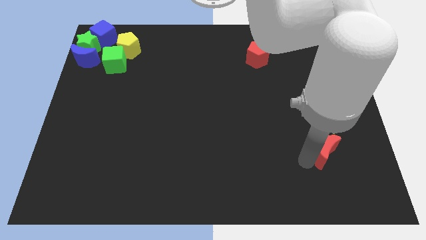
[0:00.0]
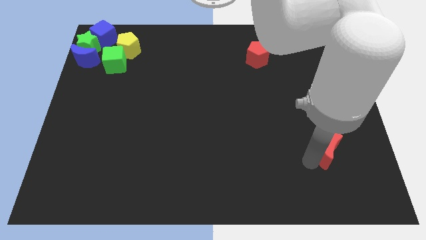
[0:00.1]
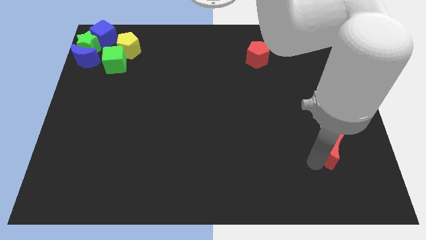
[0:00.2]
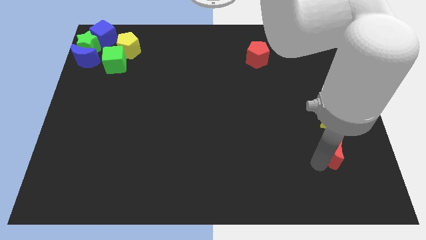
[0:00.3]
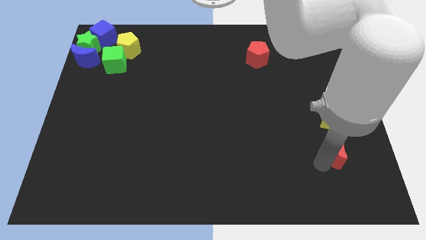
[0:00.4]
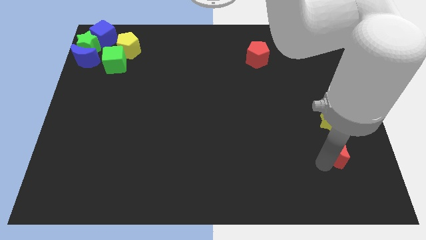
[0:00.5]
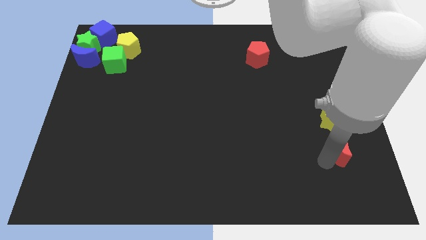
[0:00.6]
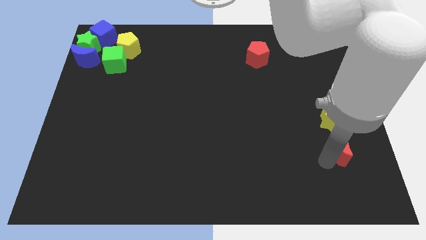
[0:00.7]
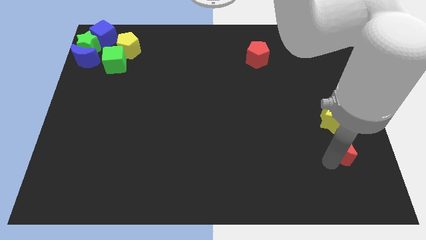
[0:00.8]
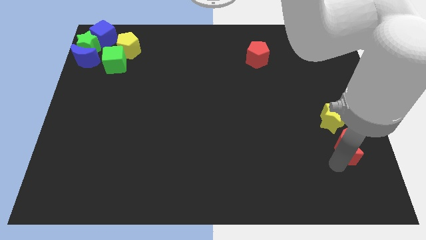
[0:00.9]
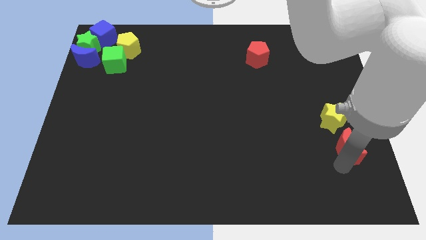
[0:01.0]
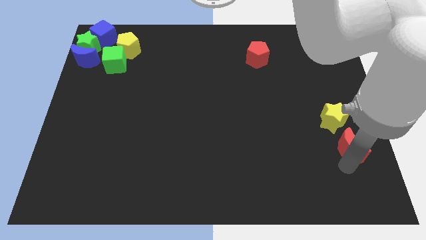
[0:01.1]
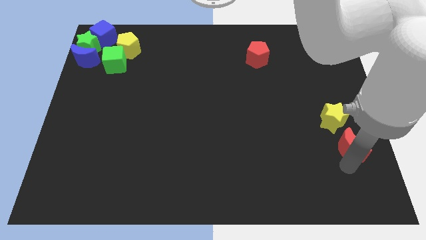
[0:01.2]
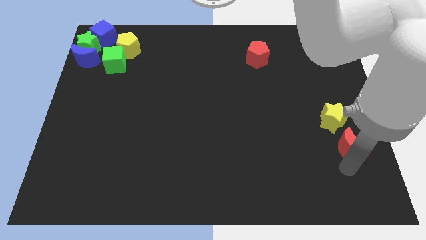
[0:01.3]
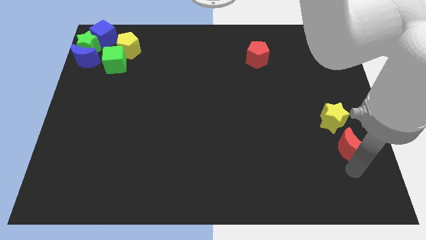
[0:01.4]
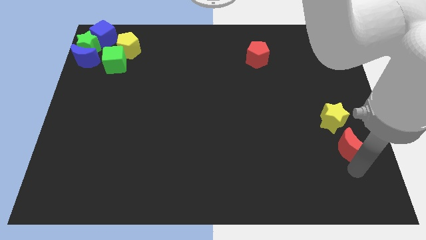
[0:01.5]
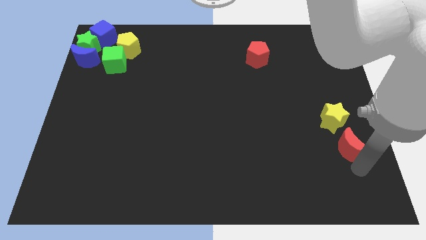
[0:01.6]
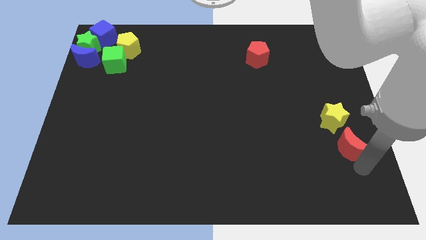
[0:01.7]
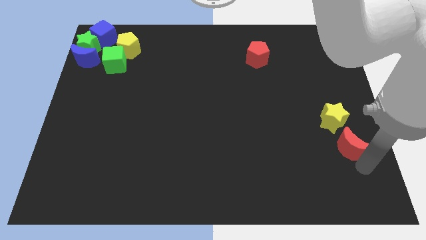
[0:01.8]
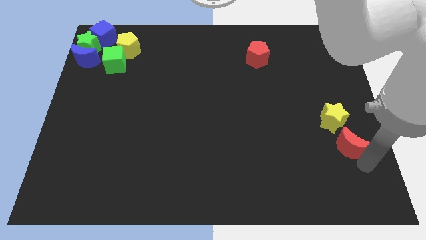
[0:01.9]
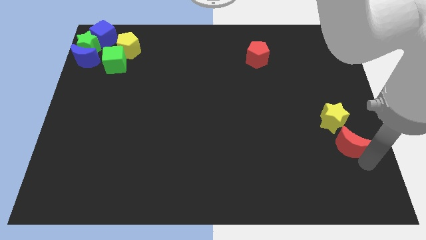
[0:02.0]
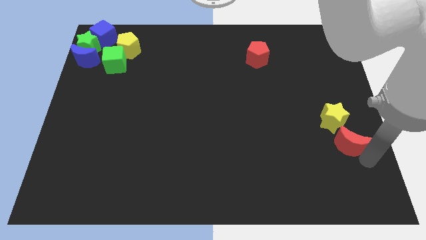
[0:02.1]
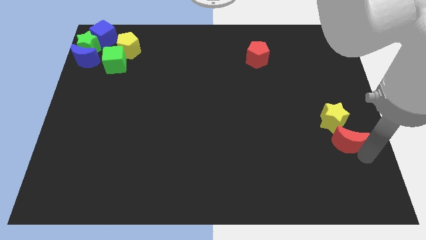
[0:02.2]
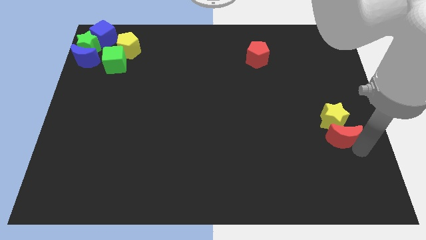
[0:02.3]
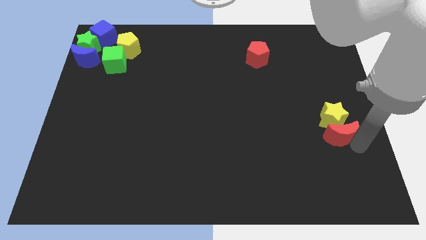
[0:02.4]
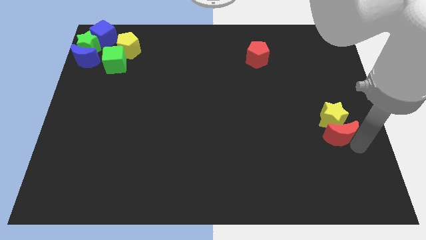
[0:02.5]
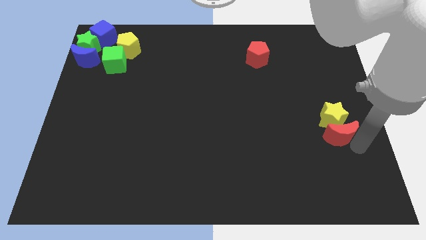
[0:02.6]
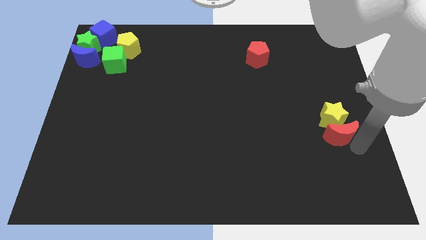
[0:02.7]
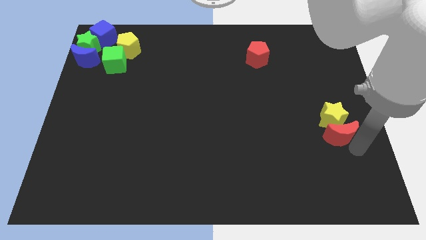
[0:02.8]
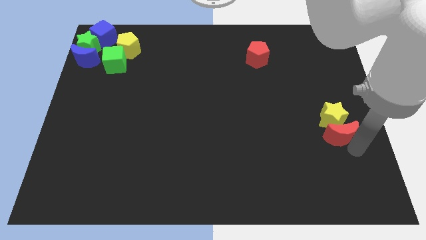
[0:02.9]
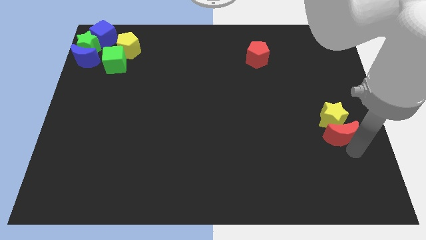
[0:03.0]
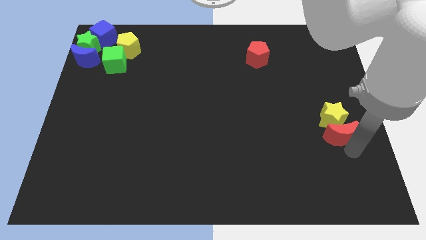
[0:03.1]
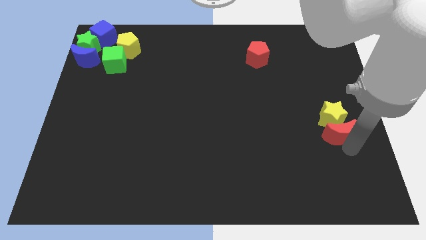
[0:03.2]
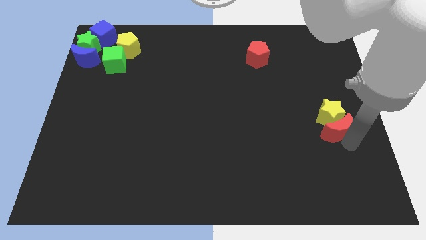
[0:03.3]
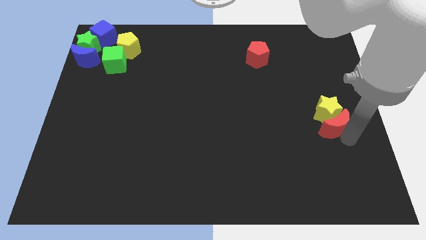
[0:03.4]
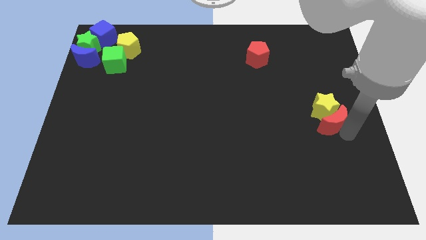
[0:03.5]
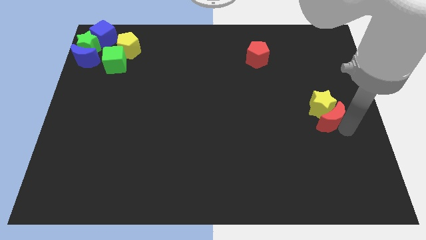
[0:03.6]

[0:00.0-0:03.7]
move the red moon into the yellow star

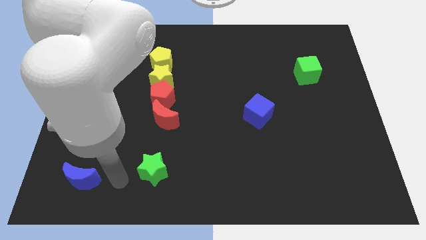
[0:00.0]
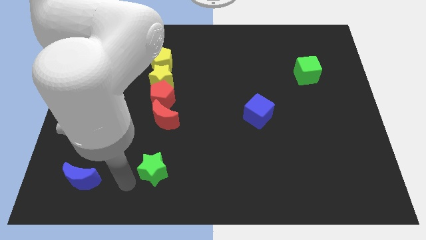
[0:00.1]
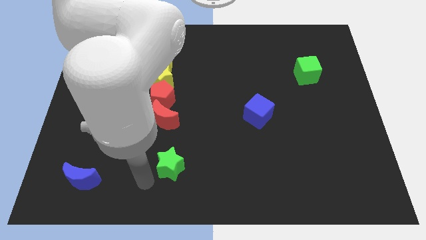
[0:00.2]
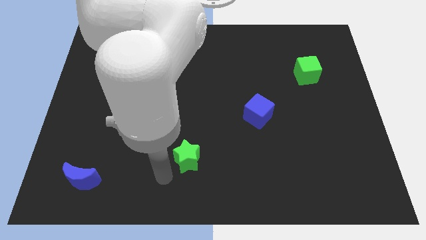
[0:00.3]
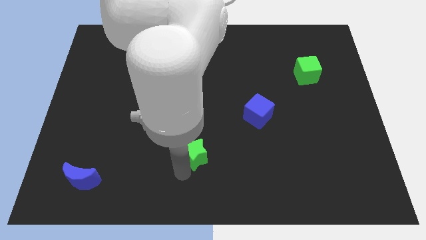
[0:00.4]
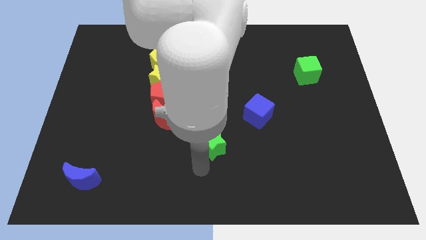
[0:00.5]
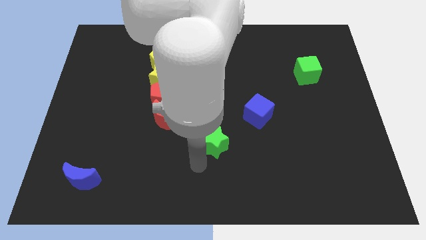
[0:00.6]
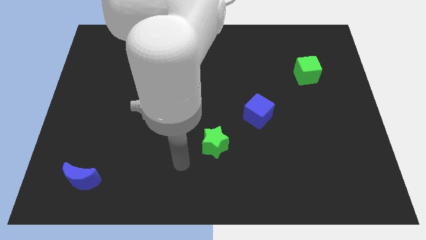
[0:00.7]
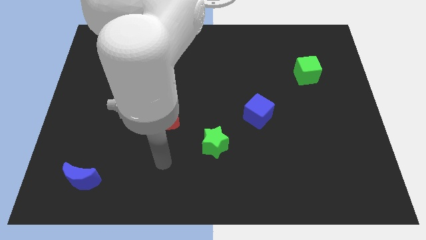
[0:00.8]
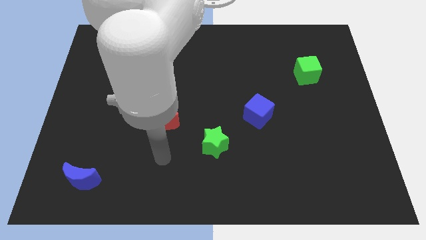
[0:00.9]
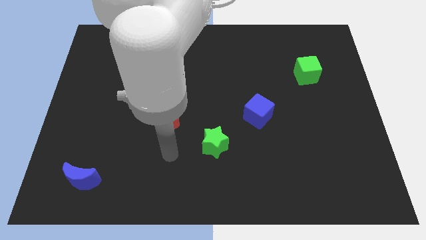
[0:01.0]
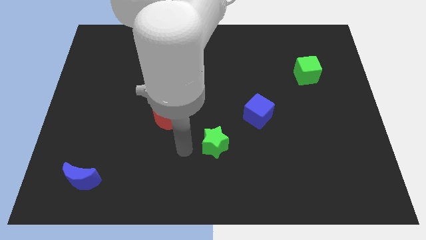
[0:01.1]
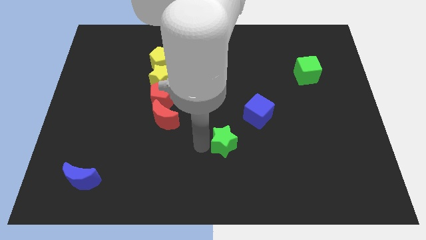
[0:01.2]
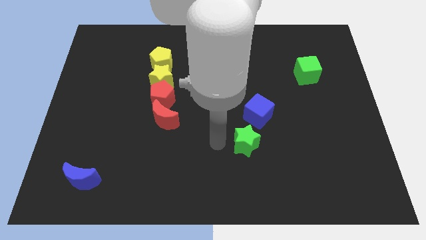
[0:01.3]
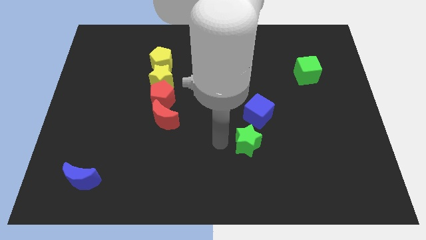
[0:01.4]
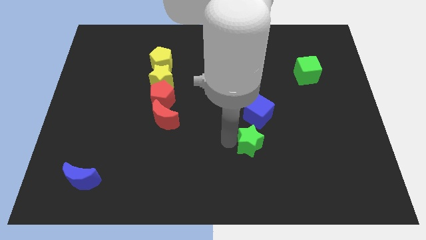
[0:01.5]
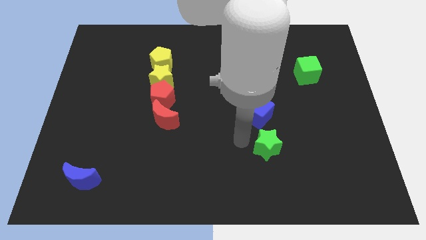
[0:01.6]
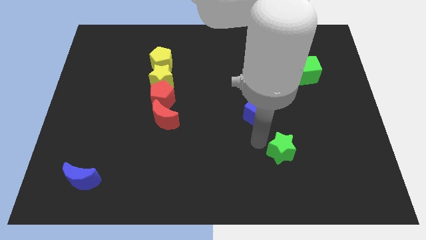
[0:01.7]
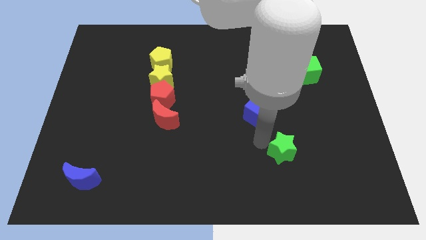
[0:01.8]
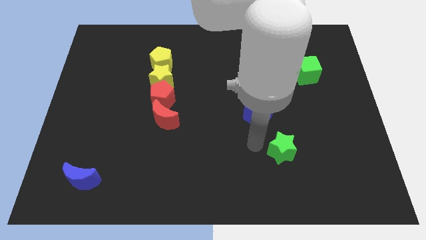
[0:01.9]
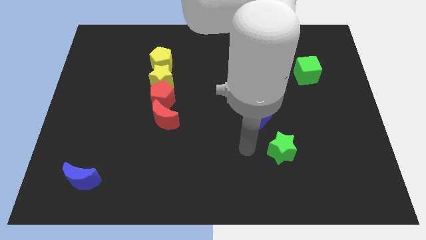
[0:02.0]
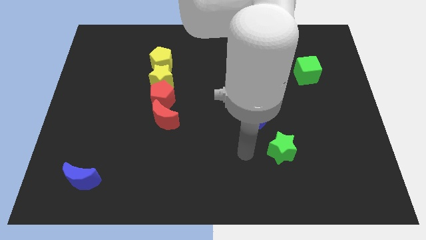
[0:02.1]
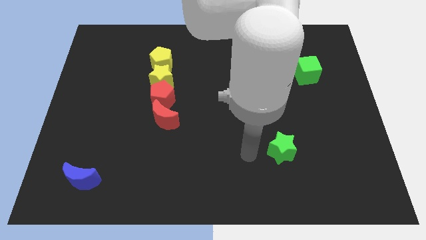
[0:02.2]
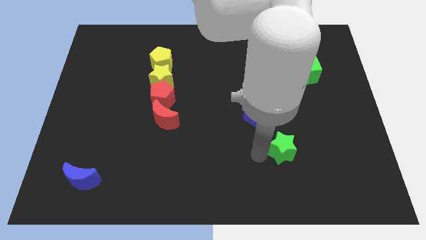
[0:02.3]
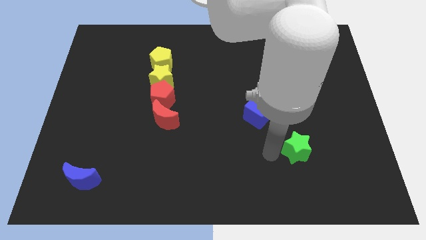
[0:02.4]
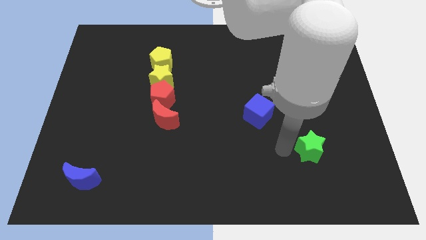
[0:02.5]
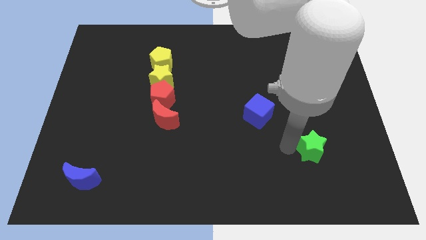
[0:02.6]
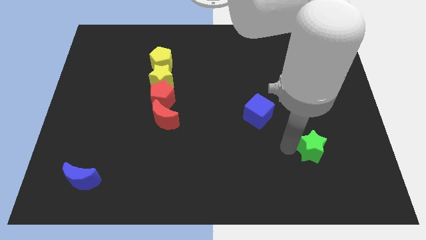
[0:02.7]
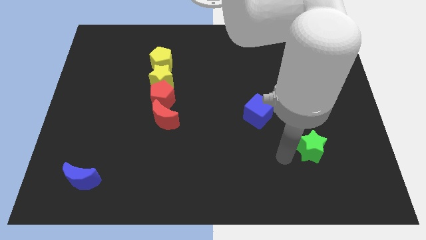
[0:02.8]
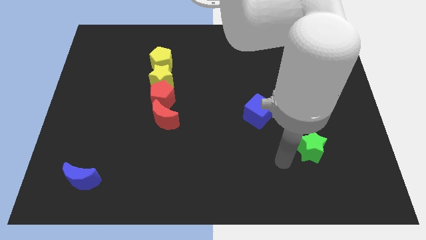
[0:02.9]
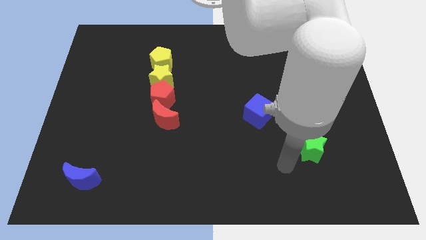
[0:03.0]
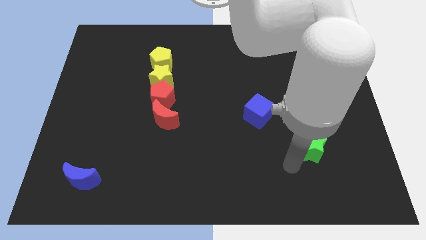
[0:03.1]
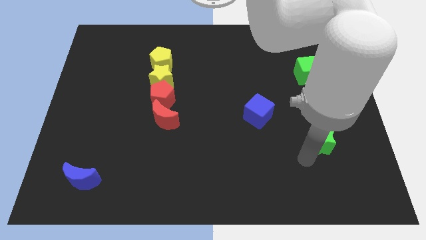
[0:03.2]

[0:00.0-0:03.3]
move the green star vertically below the green cube

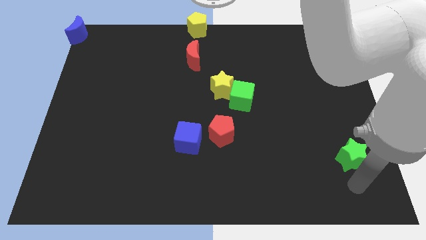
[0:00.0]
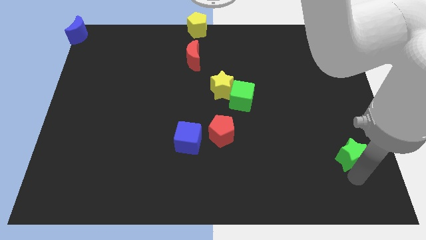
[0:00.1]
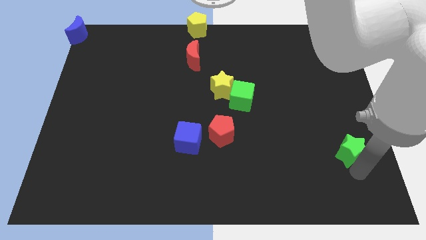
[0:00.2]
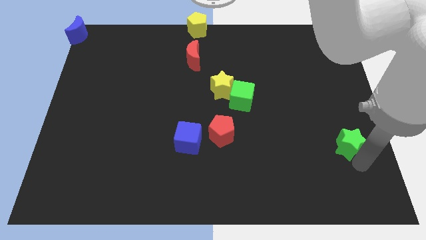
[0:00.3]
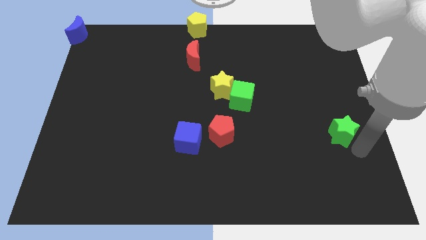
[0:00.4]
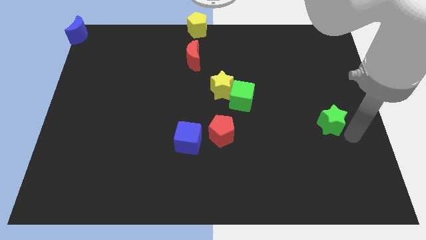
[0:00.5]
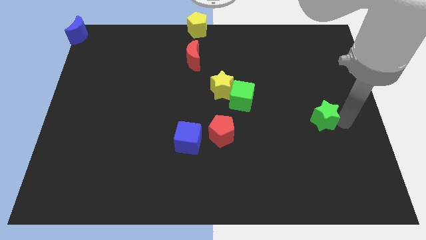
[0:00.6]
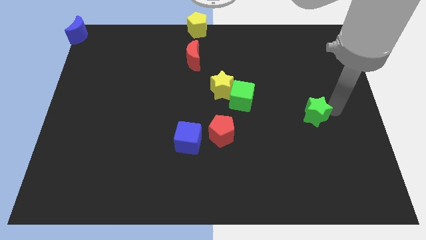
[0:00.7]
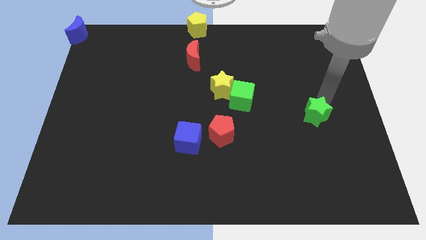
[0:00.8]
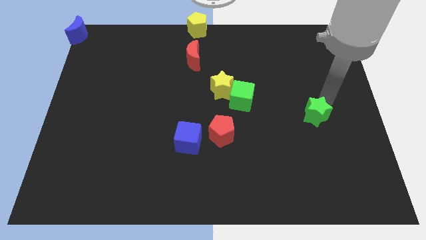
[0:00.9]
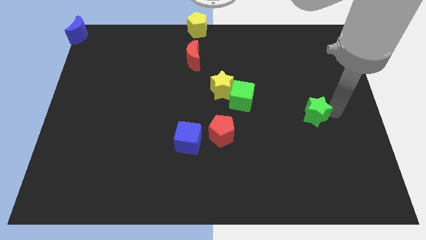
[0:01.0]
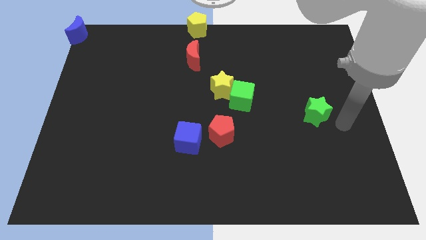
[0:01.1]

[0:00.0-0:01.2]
push the green star towards the top

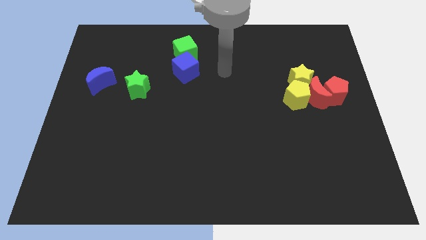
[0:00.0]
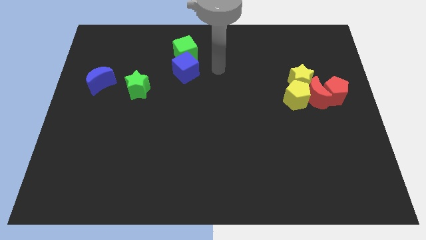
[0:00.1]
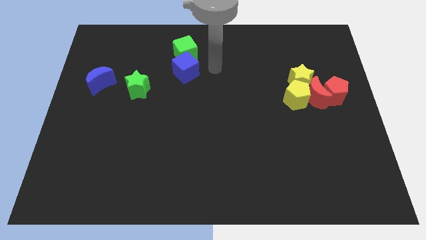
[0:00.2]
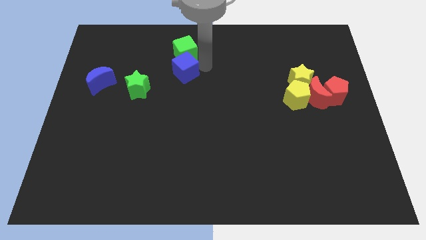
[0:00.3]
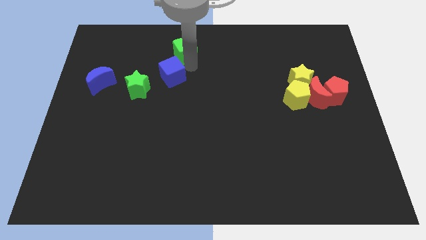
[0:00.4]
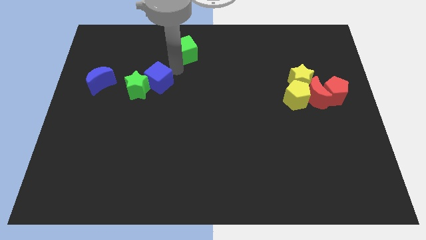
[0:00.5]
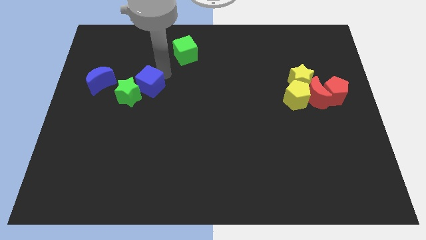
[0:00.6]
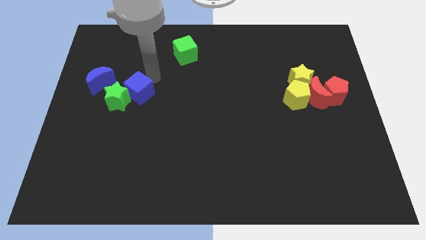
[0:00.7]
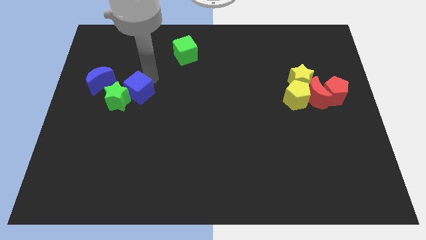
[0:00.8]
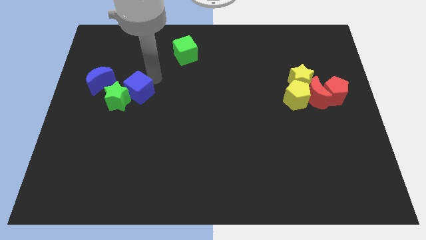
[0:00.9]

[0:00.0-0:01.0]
move the blue cube and green star slightly down
